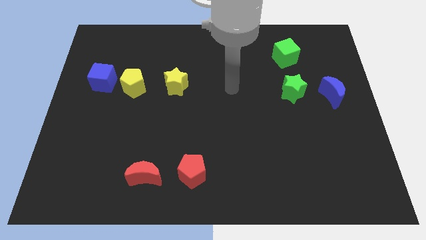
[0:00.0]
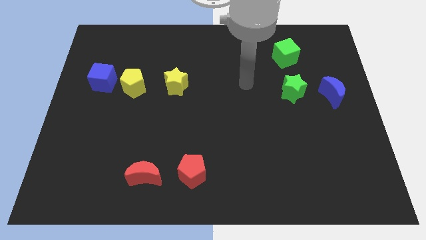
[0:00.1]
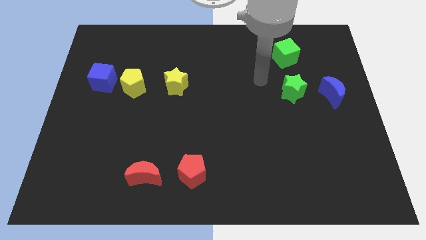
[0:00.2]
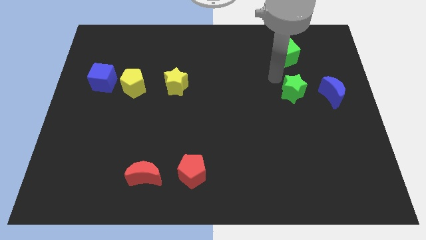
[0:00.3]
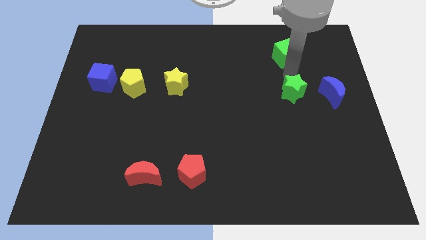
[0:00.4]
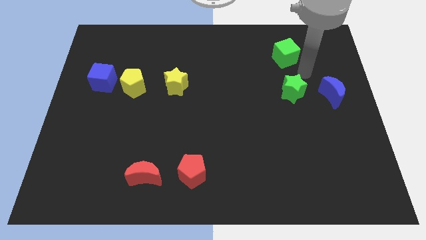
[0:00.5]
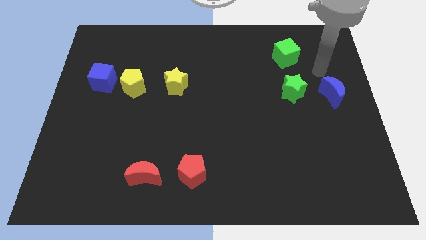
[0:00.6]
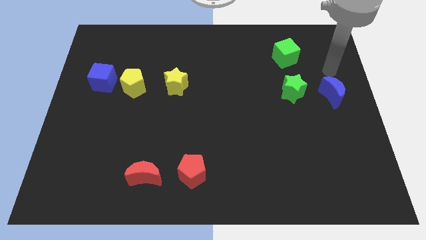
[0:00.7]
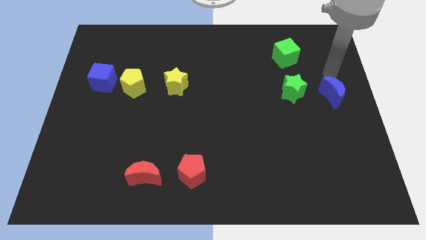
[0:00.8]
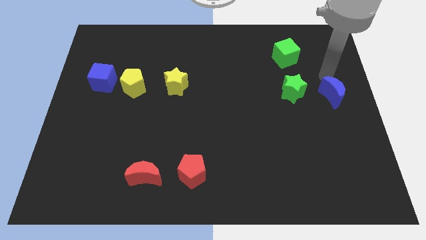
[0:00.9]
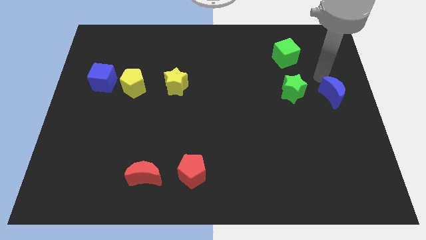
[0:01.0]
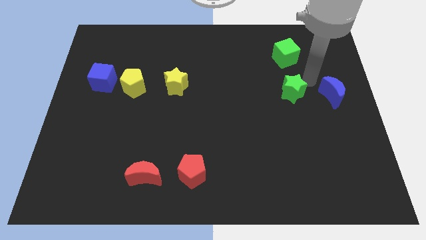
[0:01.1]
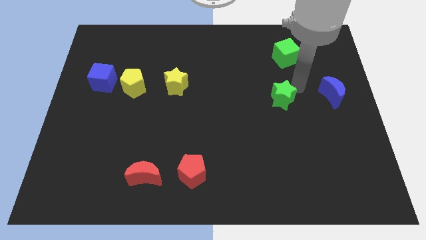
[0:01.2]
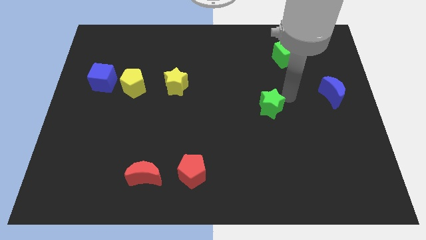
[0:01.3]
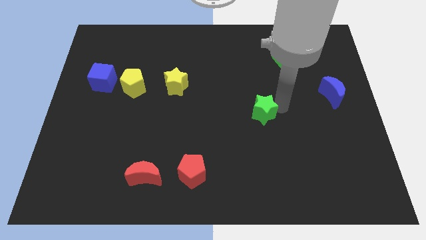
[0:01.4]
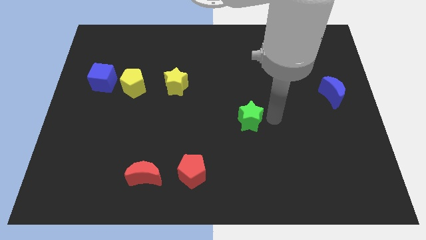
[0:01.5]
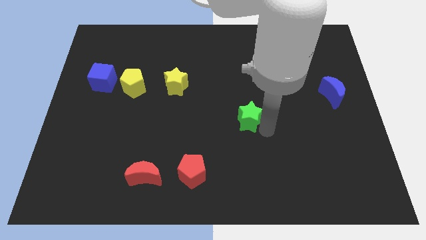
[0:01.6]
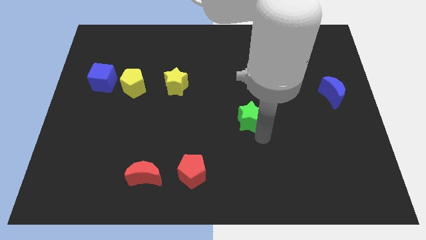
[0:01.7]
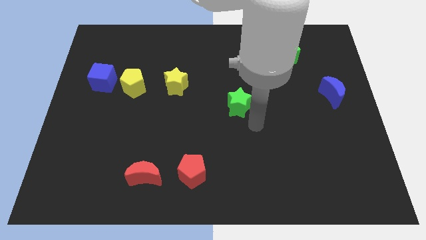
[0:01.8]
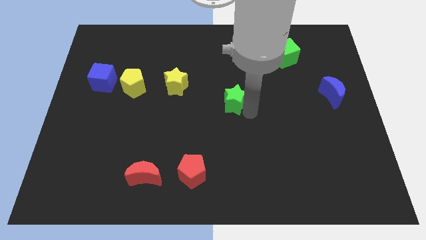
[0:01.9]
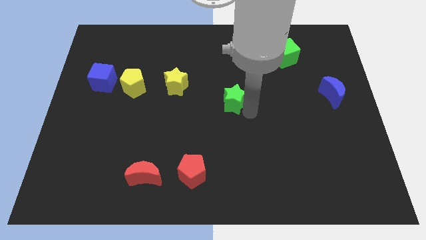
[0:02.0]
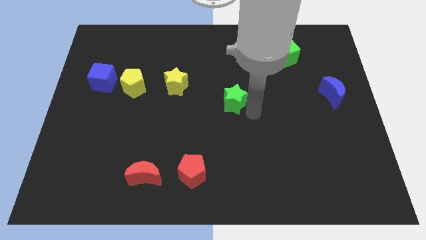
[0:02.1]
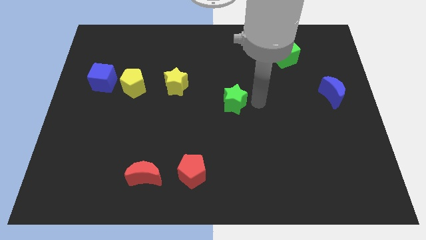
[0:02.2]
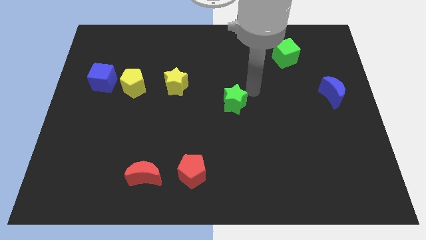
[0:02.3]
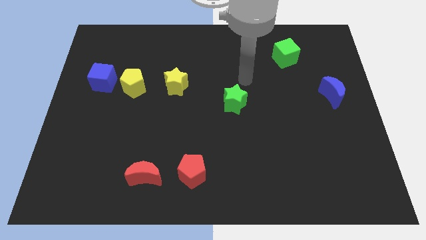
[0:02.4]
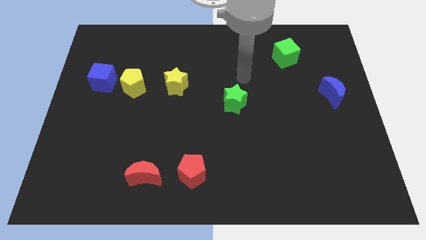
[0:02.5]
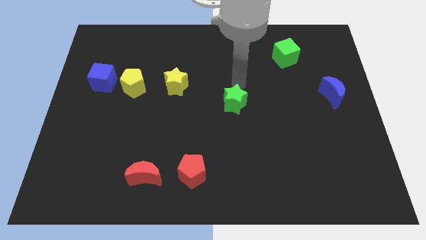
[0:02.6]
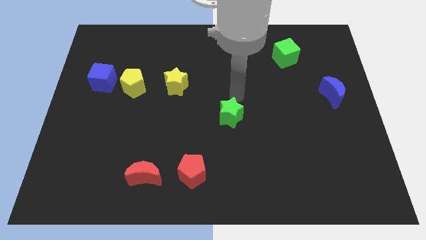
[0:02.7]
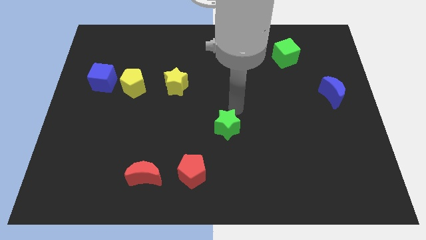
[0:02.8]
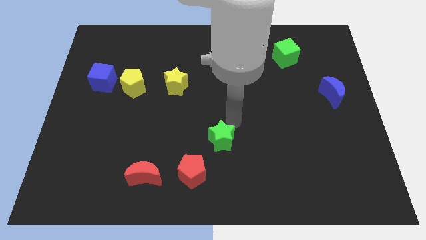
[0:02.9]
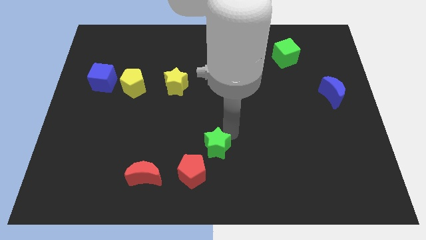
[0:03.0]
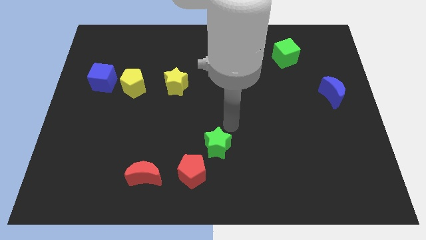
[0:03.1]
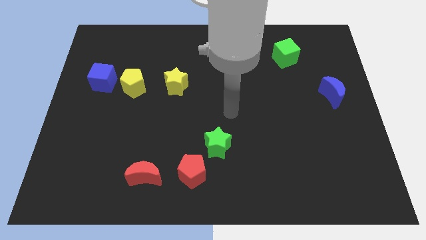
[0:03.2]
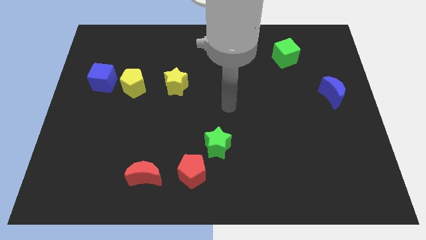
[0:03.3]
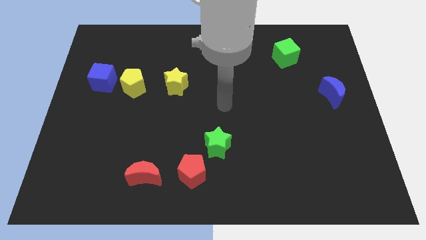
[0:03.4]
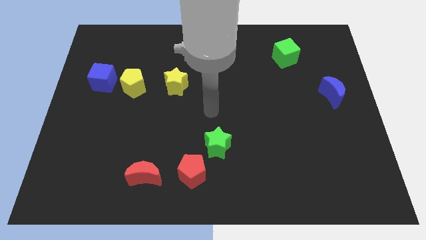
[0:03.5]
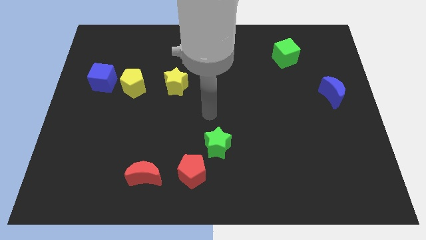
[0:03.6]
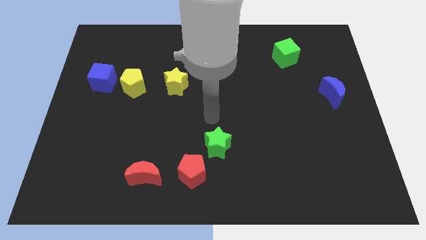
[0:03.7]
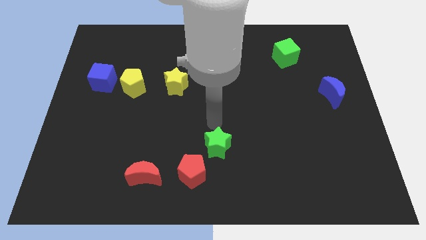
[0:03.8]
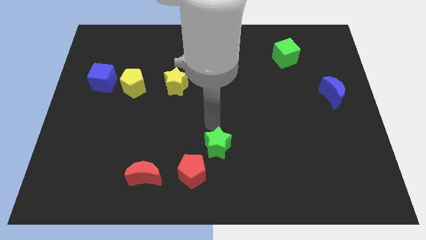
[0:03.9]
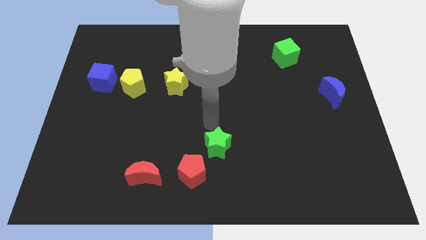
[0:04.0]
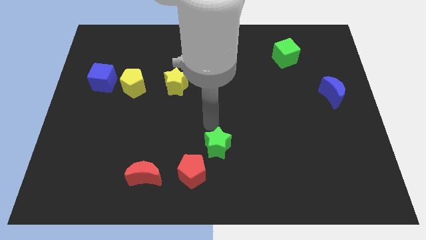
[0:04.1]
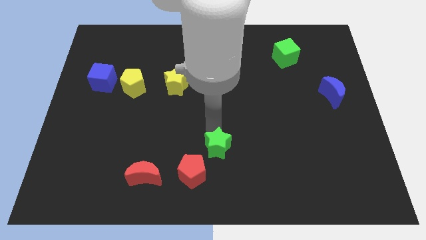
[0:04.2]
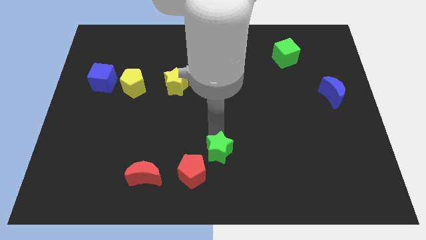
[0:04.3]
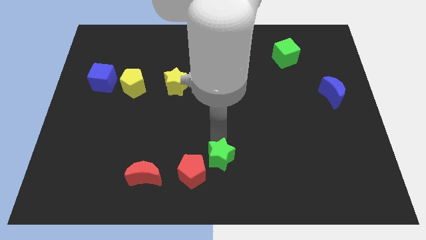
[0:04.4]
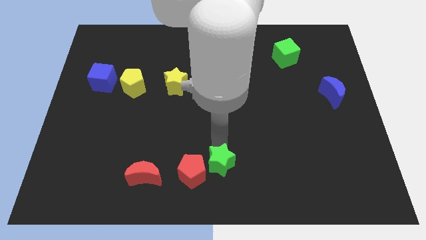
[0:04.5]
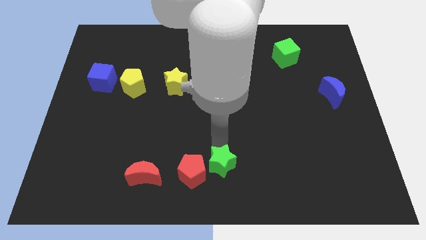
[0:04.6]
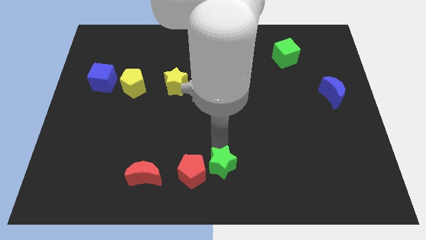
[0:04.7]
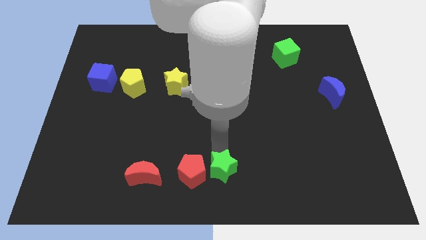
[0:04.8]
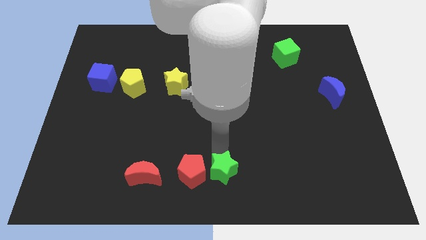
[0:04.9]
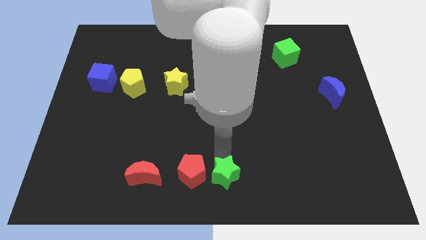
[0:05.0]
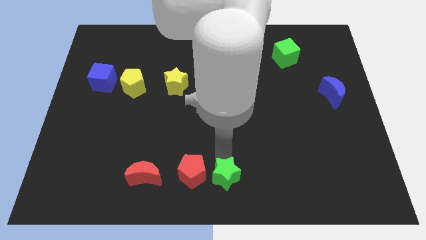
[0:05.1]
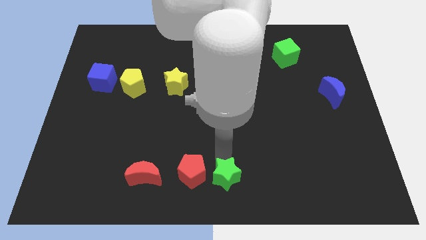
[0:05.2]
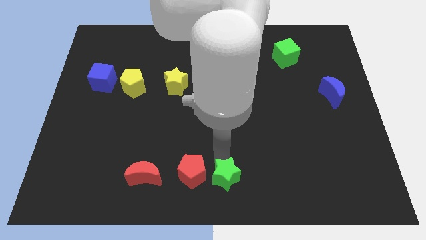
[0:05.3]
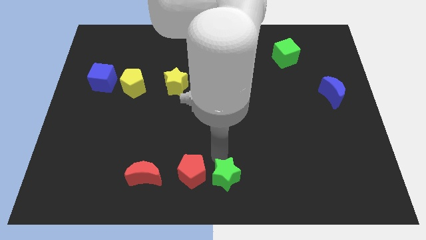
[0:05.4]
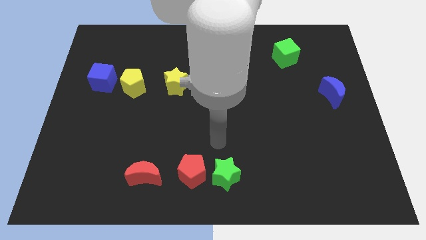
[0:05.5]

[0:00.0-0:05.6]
drag the green star towards the bottom center of the board

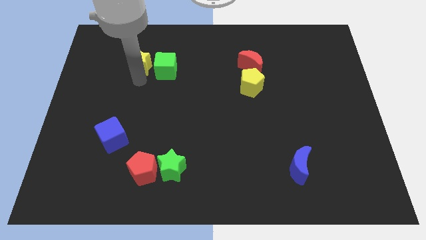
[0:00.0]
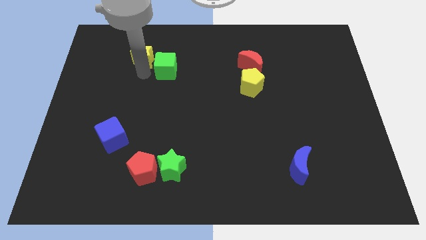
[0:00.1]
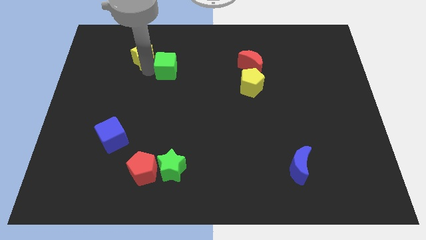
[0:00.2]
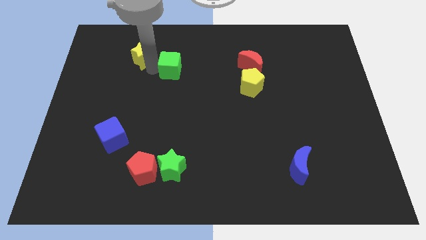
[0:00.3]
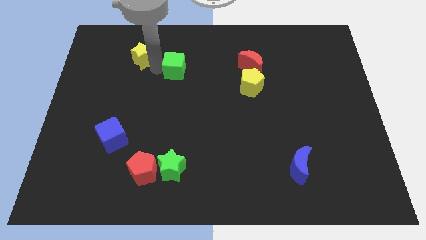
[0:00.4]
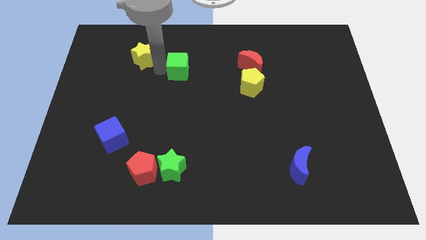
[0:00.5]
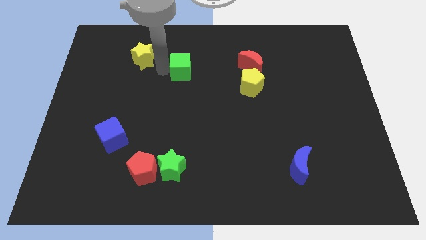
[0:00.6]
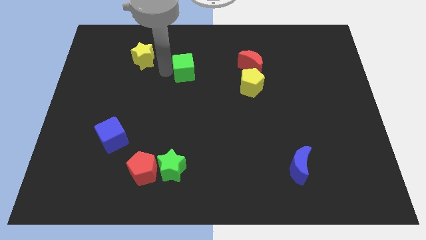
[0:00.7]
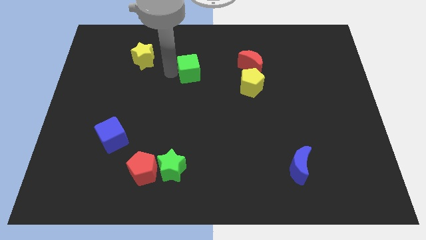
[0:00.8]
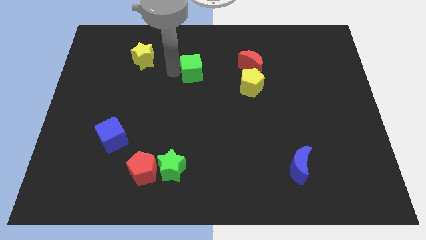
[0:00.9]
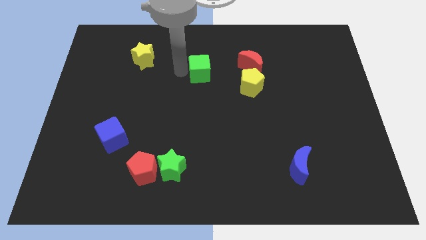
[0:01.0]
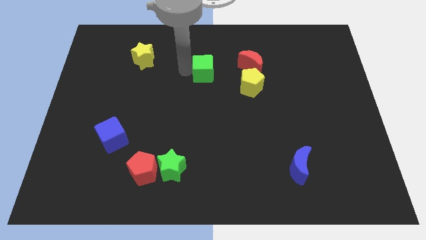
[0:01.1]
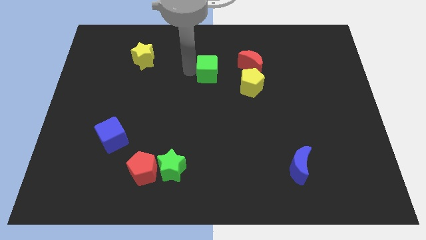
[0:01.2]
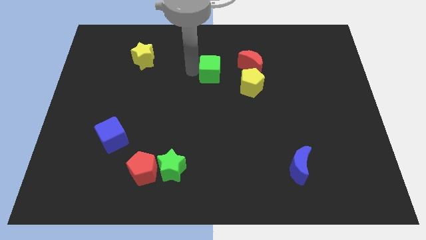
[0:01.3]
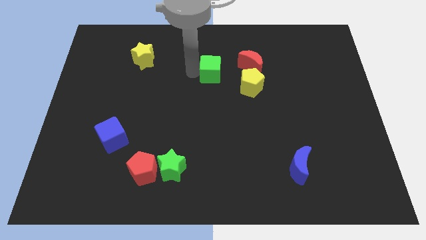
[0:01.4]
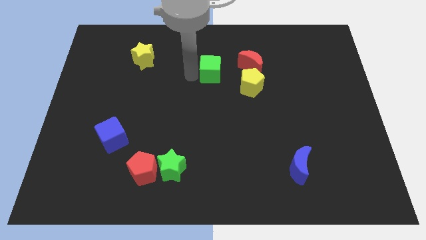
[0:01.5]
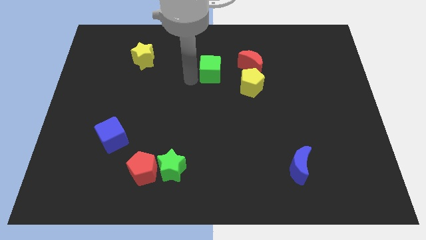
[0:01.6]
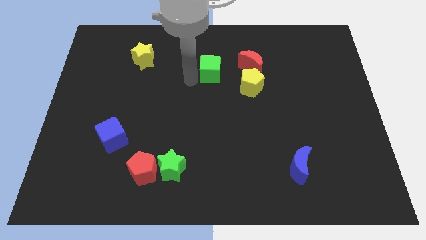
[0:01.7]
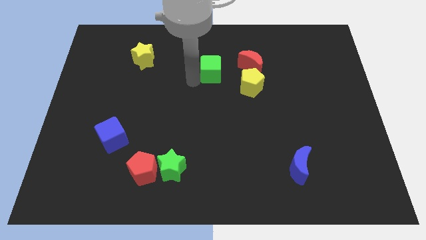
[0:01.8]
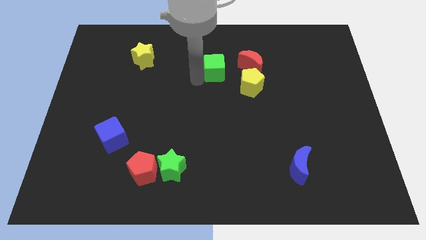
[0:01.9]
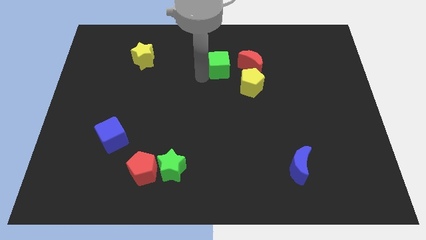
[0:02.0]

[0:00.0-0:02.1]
place green cube left to red crescent

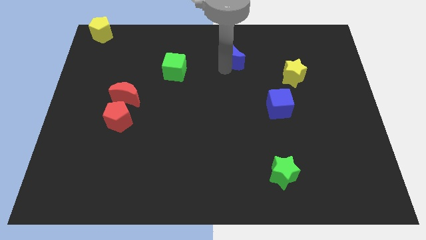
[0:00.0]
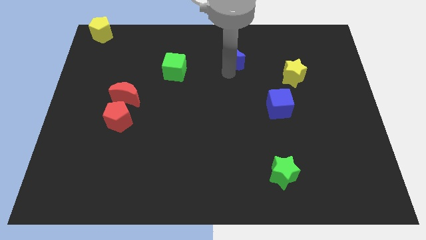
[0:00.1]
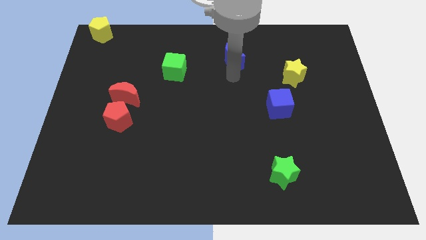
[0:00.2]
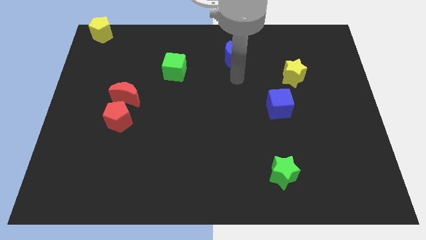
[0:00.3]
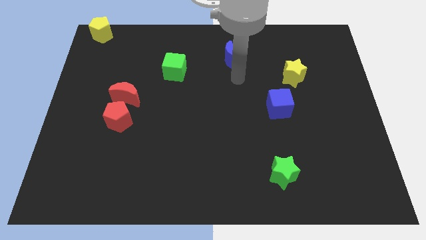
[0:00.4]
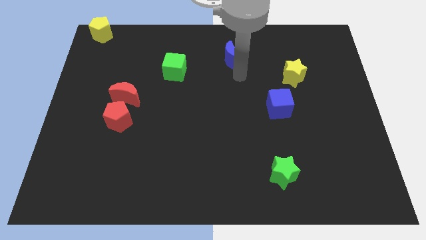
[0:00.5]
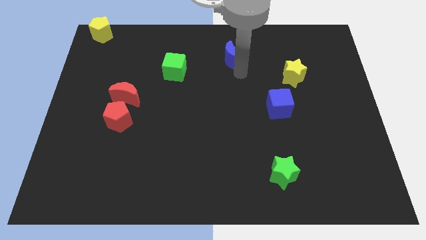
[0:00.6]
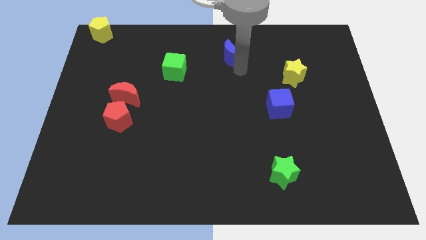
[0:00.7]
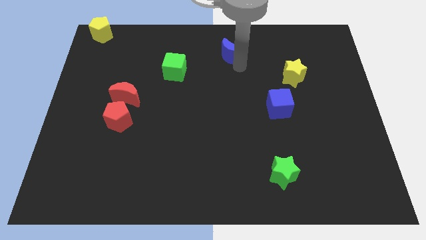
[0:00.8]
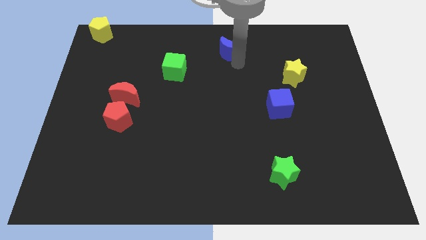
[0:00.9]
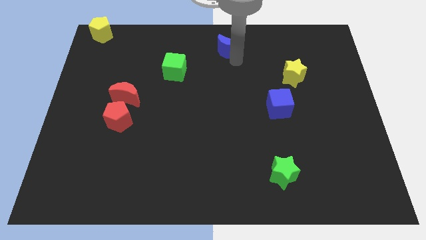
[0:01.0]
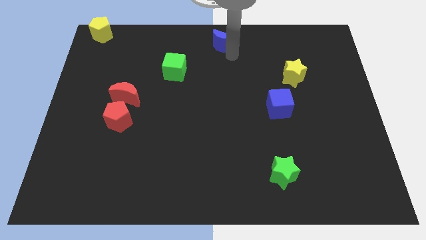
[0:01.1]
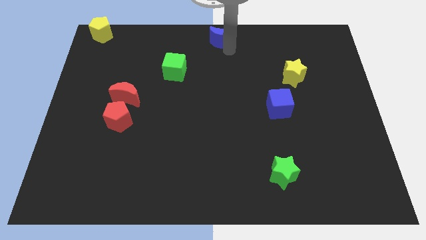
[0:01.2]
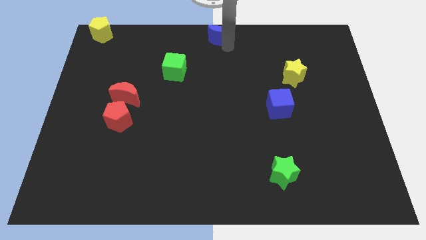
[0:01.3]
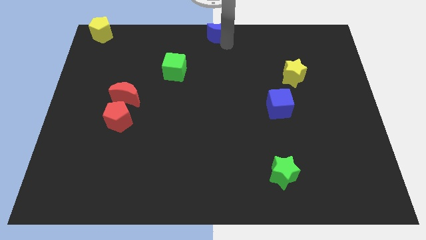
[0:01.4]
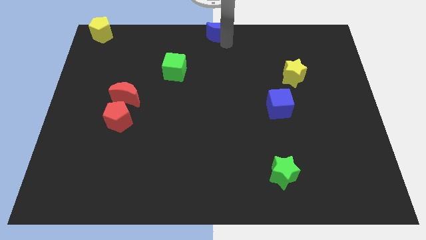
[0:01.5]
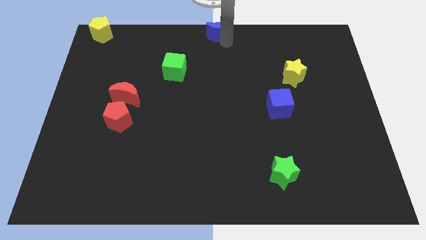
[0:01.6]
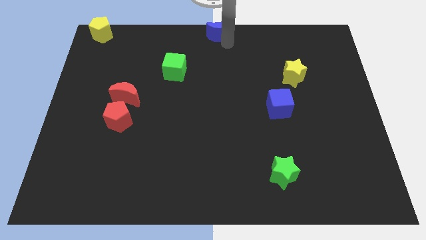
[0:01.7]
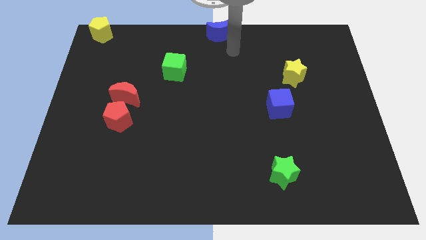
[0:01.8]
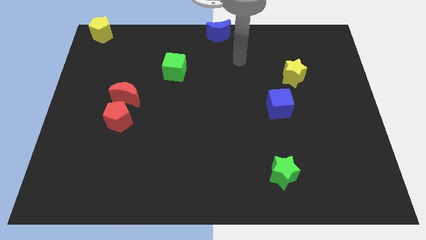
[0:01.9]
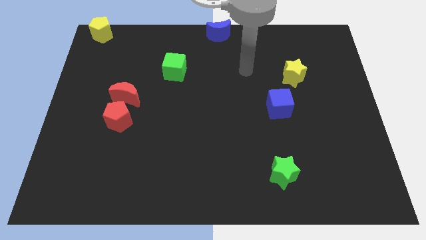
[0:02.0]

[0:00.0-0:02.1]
push blue moon to the top center
